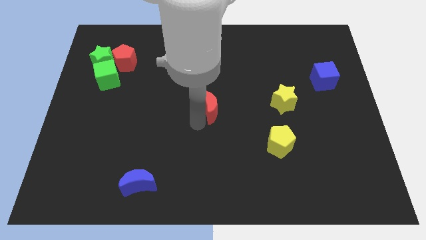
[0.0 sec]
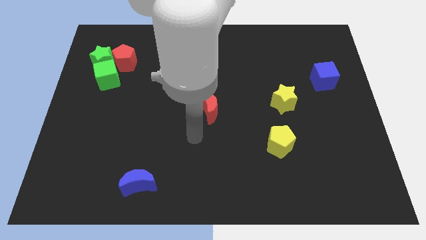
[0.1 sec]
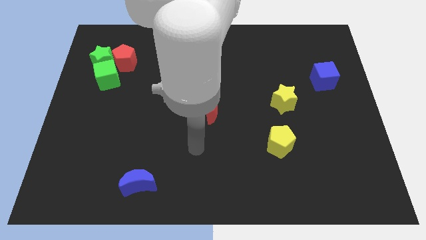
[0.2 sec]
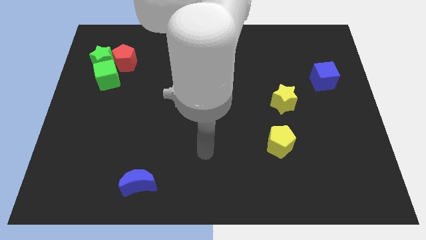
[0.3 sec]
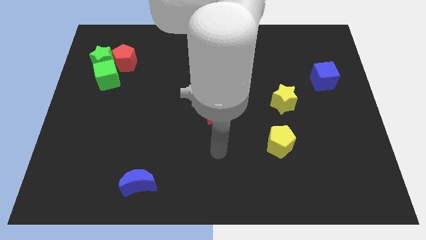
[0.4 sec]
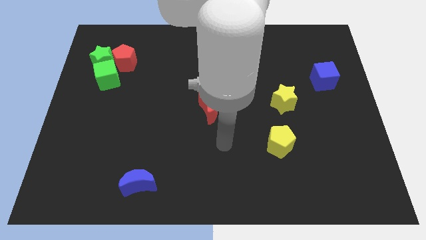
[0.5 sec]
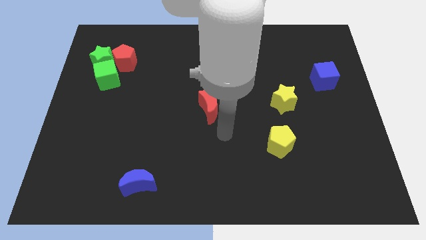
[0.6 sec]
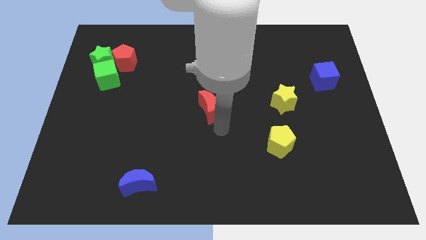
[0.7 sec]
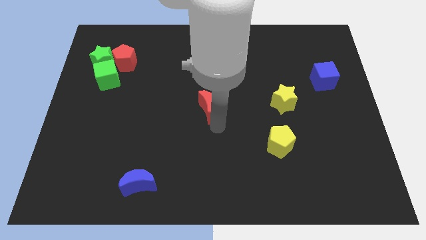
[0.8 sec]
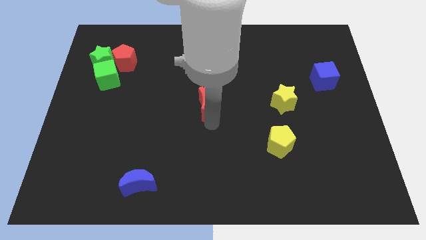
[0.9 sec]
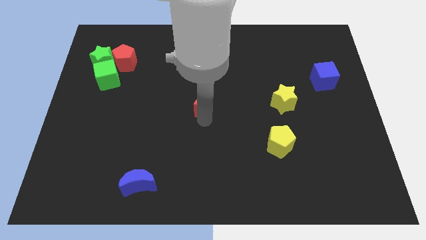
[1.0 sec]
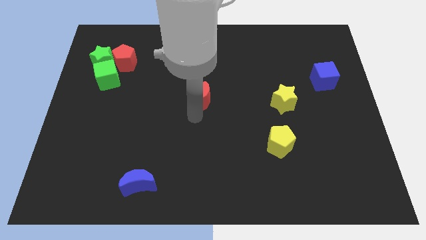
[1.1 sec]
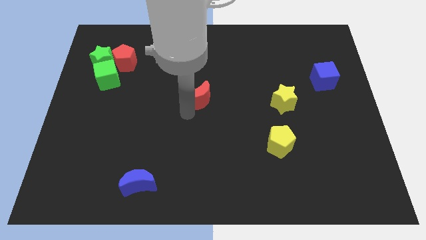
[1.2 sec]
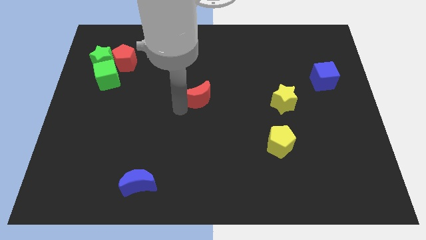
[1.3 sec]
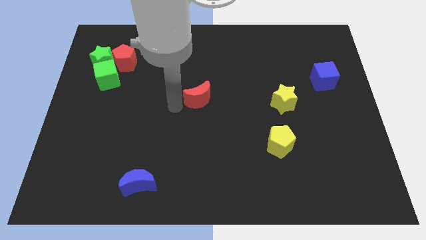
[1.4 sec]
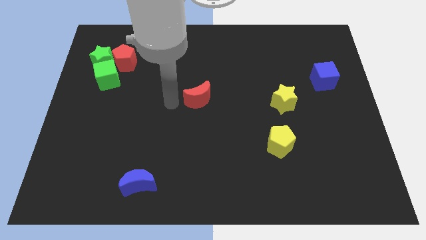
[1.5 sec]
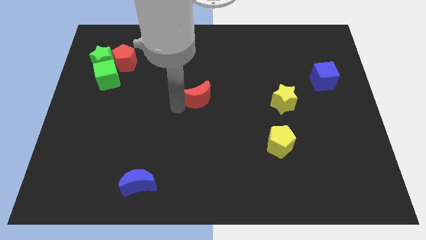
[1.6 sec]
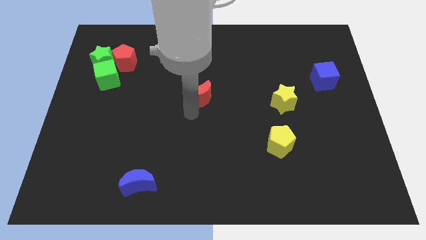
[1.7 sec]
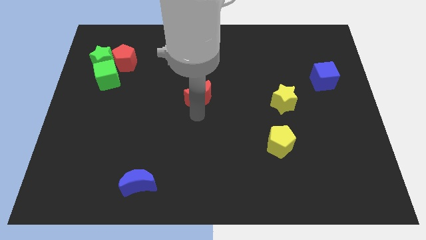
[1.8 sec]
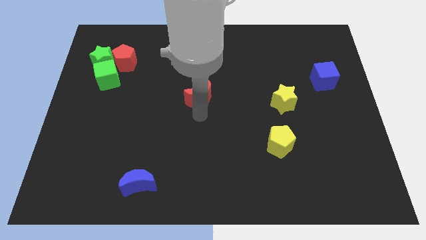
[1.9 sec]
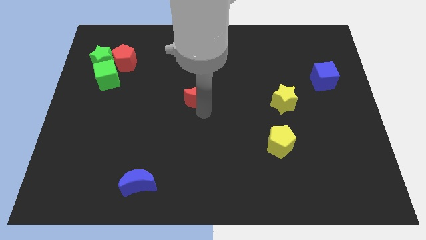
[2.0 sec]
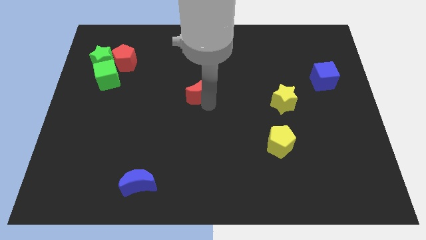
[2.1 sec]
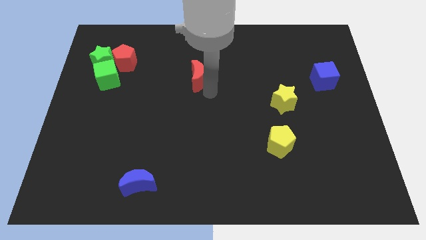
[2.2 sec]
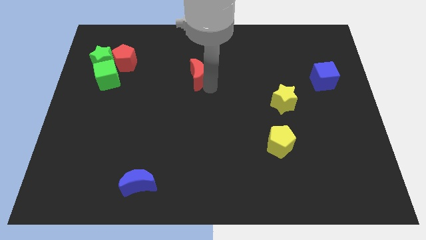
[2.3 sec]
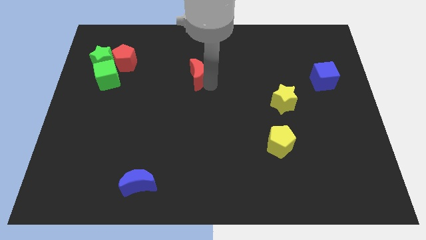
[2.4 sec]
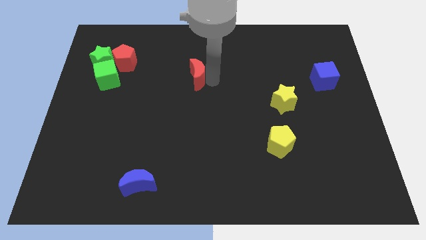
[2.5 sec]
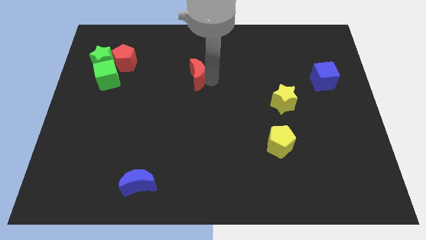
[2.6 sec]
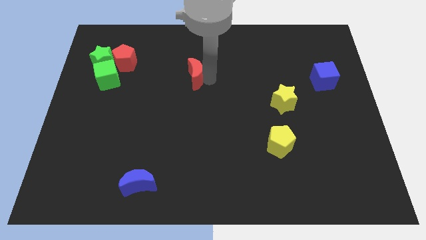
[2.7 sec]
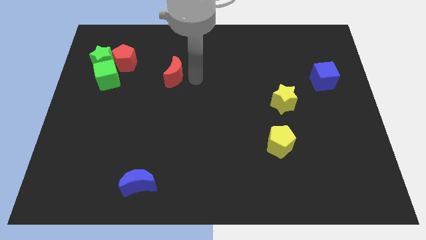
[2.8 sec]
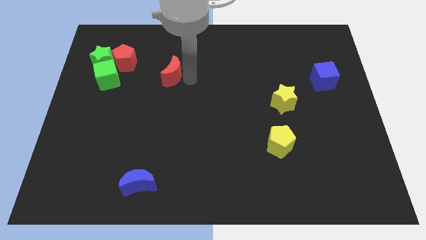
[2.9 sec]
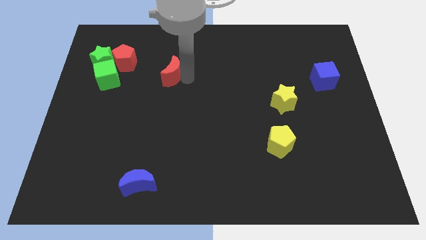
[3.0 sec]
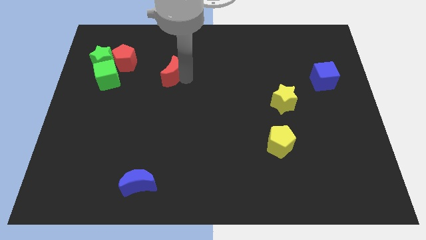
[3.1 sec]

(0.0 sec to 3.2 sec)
move the red crescent towards the red pentagon

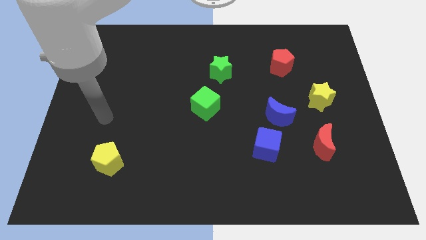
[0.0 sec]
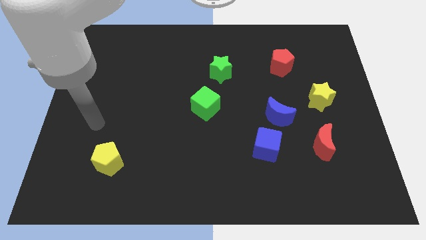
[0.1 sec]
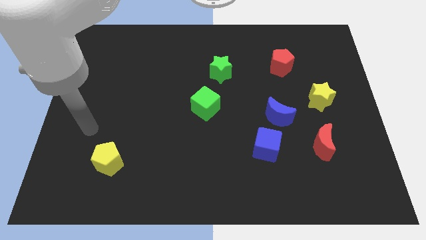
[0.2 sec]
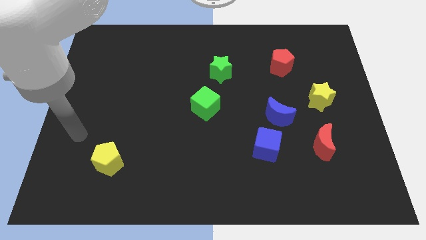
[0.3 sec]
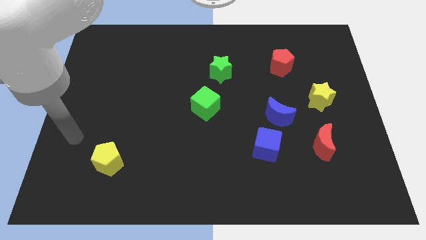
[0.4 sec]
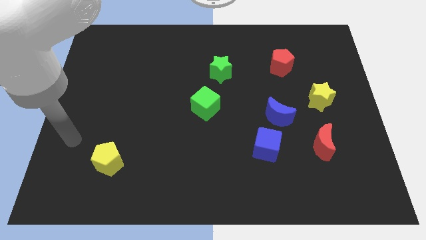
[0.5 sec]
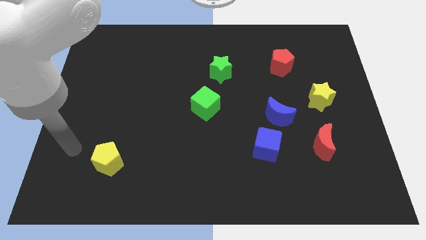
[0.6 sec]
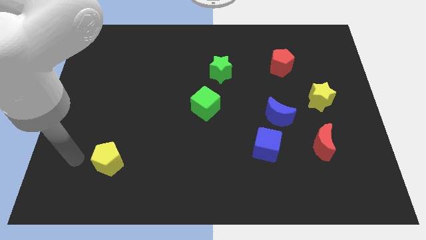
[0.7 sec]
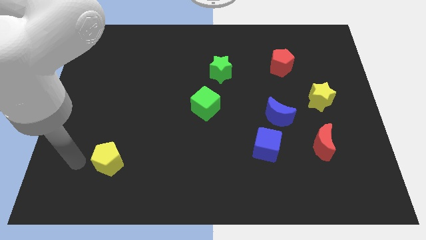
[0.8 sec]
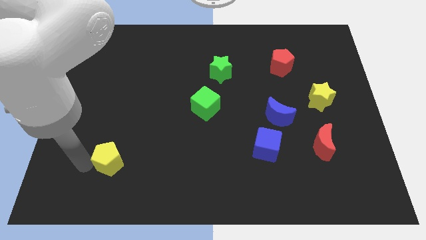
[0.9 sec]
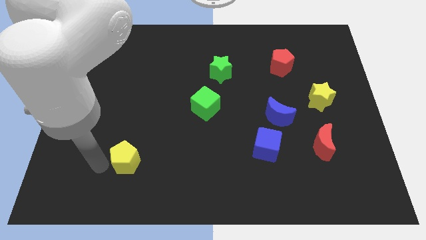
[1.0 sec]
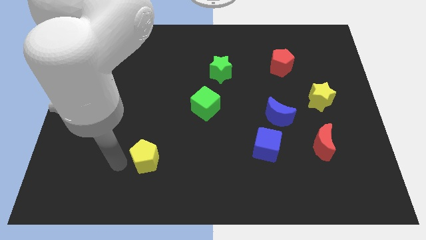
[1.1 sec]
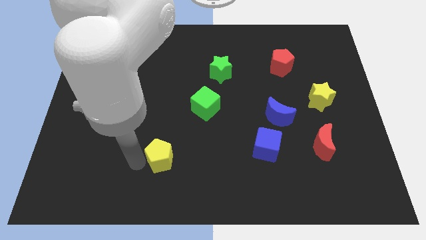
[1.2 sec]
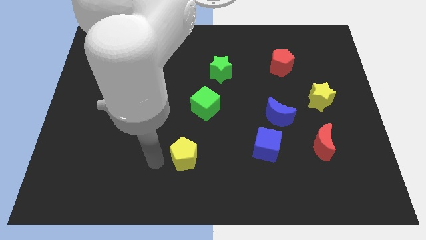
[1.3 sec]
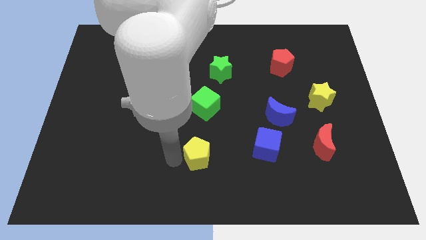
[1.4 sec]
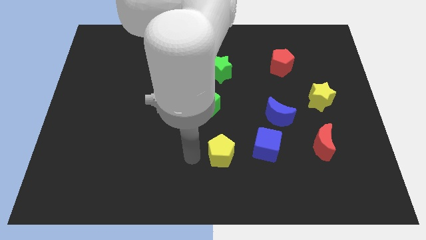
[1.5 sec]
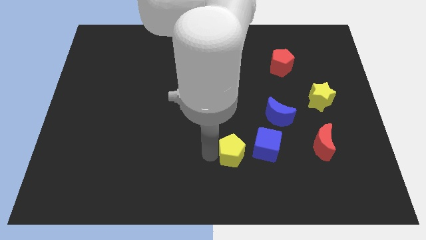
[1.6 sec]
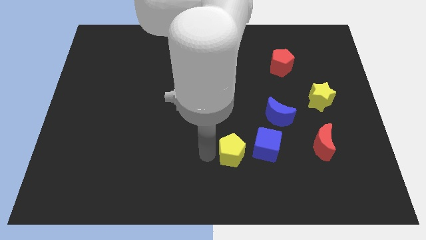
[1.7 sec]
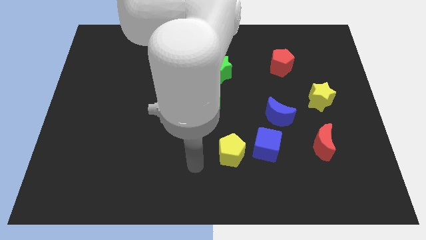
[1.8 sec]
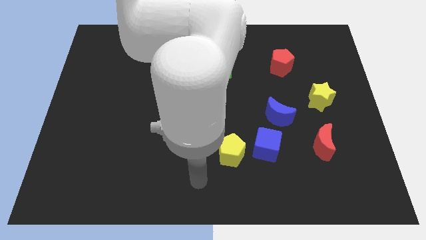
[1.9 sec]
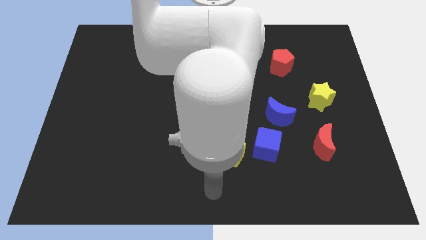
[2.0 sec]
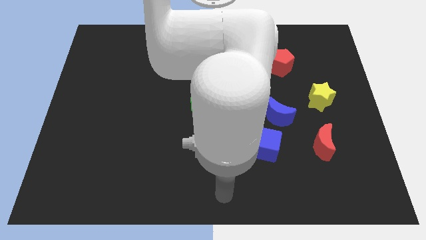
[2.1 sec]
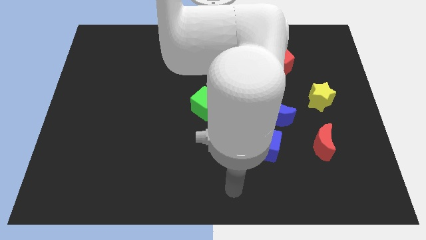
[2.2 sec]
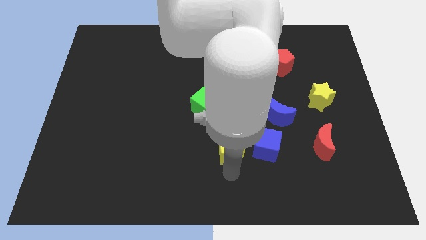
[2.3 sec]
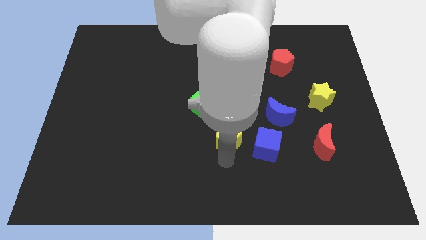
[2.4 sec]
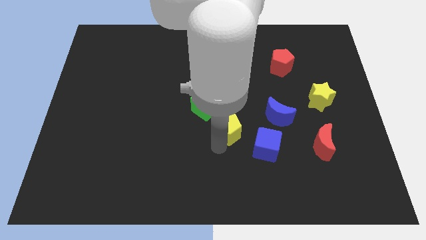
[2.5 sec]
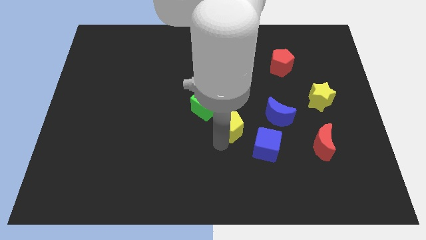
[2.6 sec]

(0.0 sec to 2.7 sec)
place the yellow pentagon to the left of the blue cube

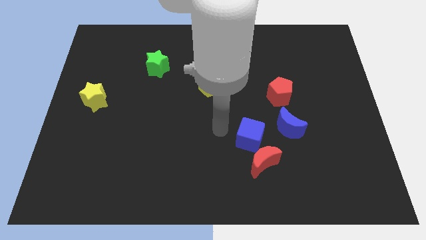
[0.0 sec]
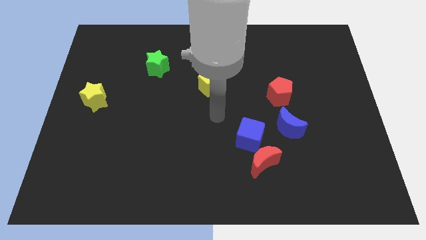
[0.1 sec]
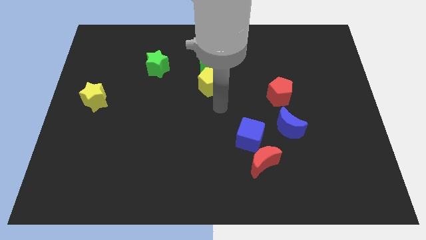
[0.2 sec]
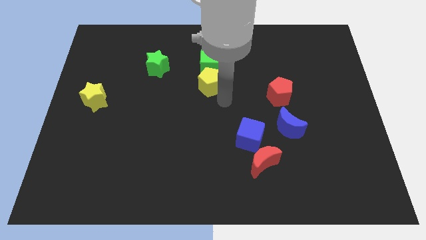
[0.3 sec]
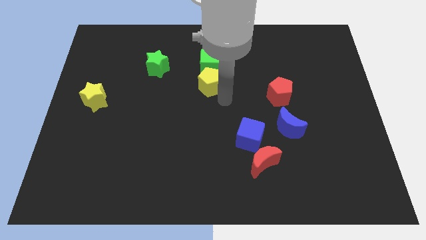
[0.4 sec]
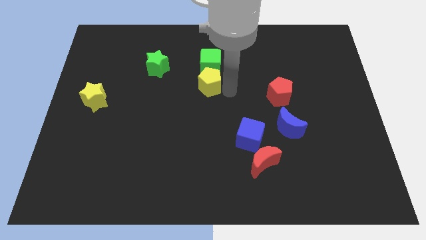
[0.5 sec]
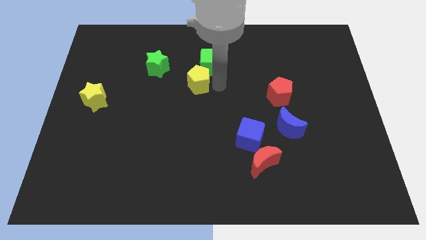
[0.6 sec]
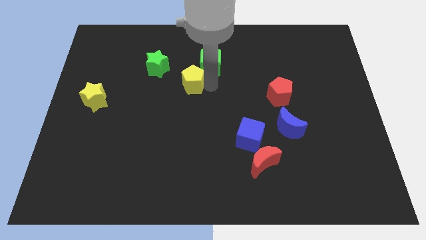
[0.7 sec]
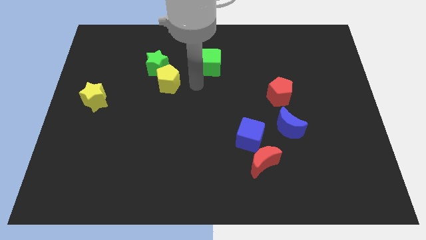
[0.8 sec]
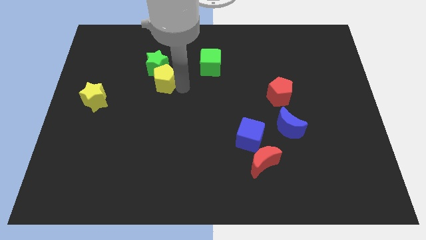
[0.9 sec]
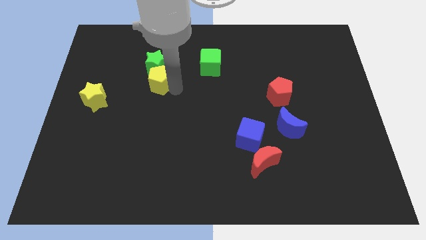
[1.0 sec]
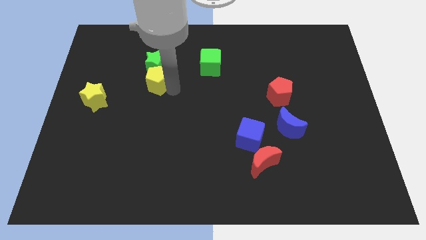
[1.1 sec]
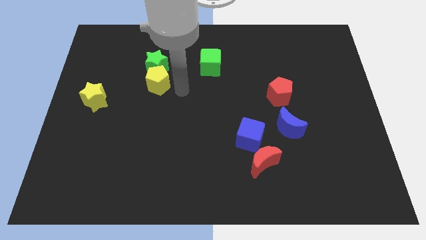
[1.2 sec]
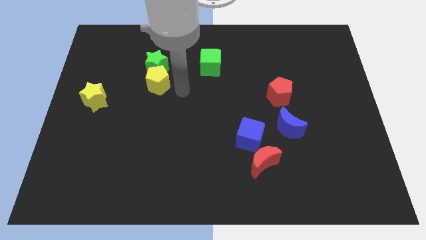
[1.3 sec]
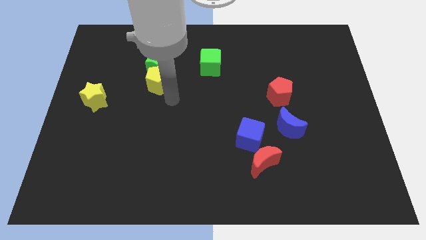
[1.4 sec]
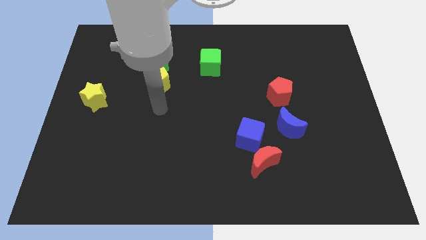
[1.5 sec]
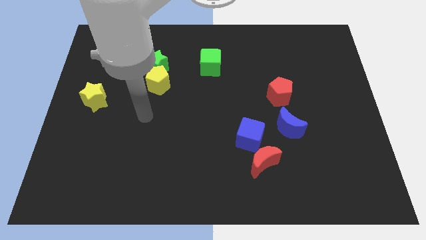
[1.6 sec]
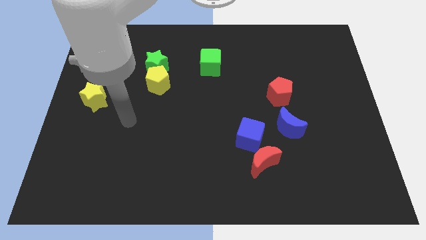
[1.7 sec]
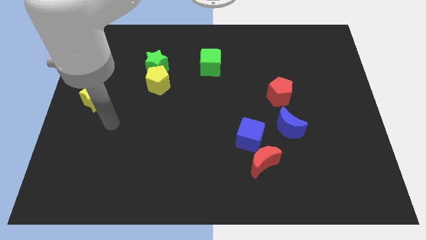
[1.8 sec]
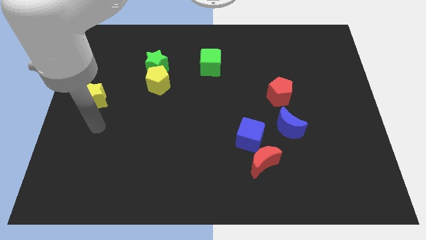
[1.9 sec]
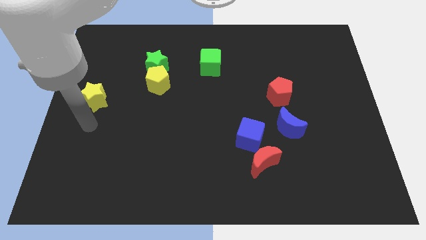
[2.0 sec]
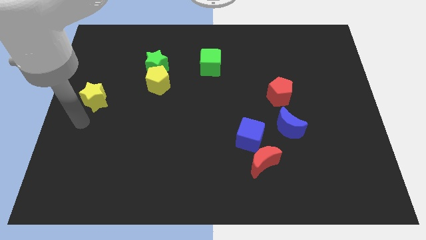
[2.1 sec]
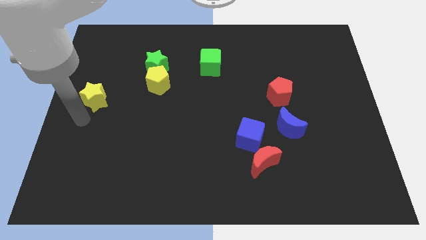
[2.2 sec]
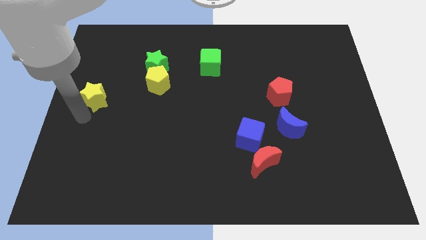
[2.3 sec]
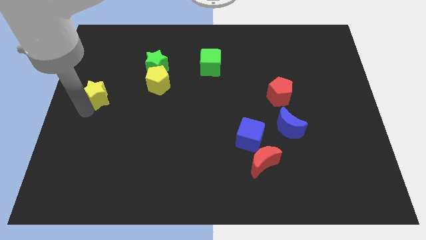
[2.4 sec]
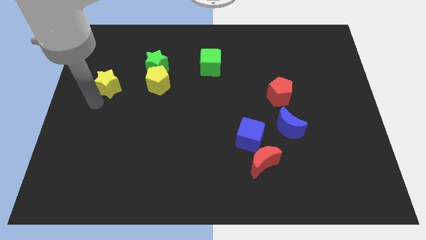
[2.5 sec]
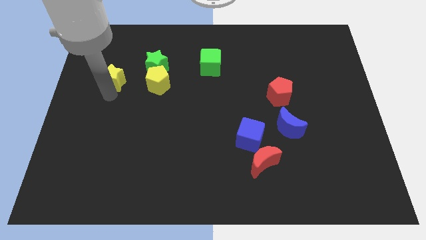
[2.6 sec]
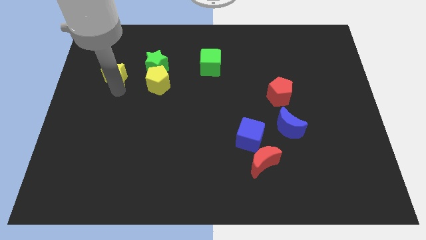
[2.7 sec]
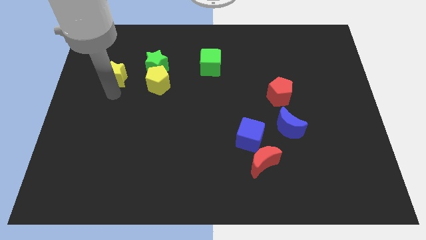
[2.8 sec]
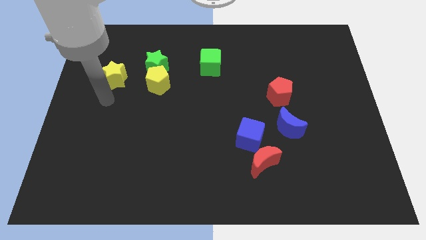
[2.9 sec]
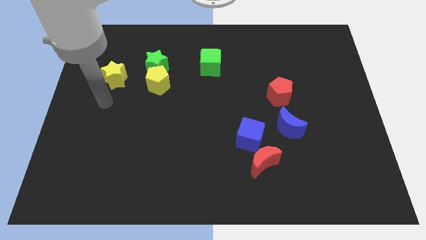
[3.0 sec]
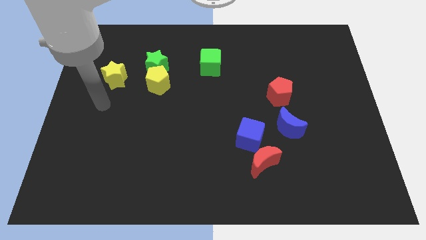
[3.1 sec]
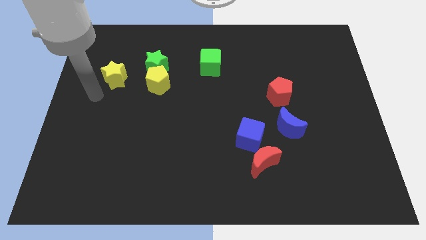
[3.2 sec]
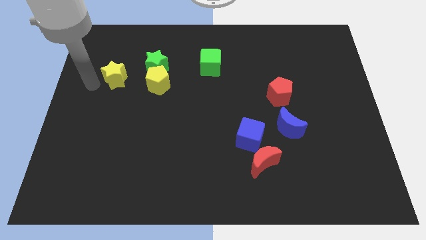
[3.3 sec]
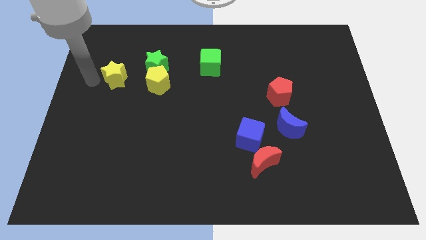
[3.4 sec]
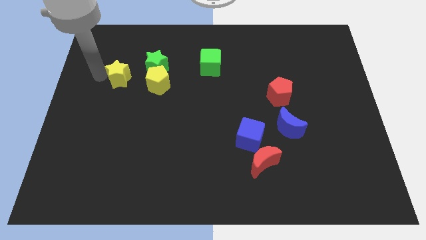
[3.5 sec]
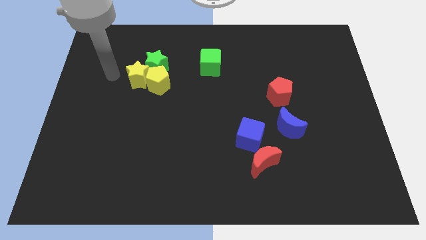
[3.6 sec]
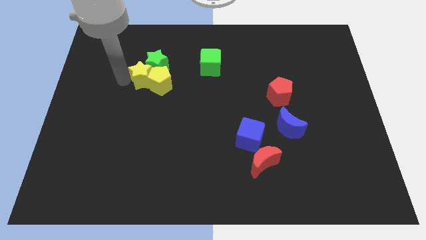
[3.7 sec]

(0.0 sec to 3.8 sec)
move yellow blocks towards the green star
